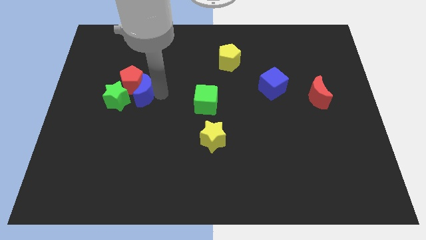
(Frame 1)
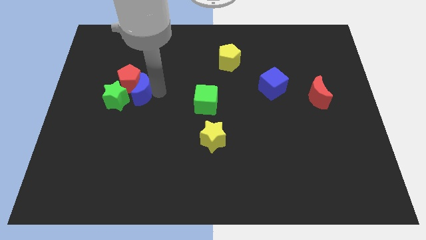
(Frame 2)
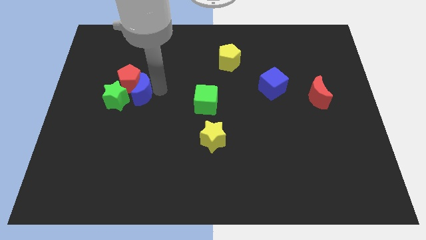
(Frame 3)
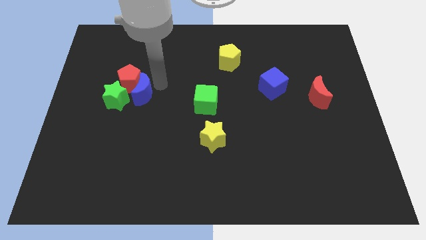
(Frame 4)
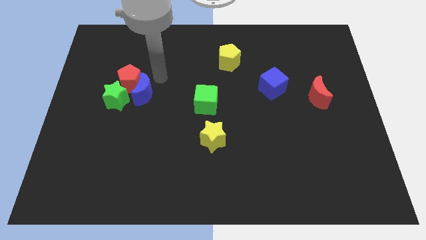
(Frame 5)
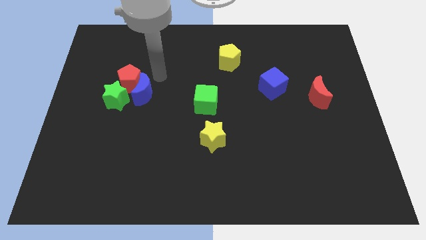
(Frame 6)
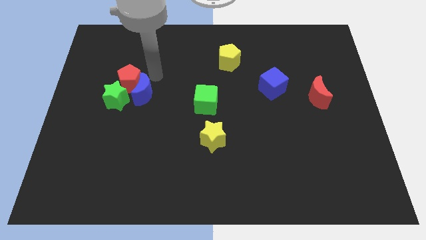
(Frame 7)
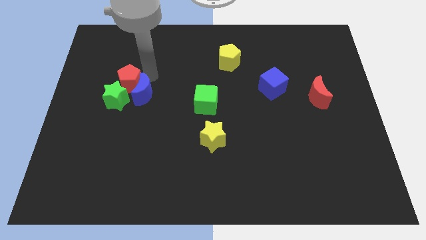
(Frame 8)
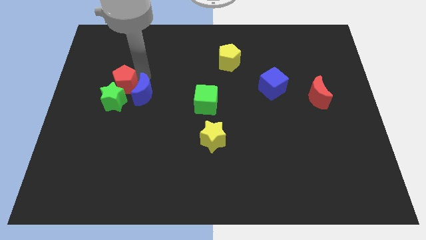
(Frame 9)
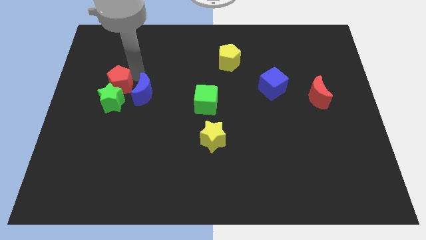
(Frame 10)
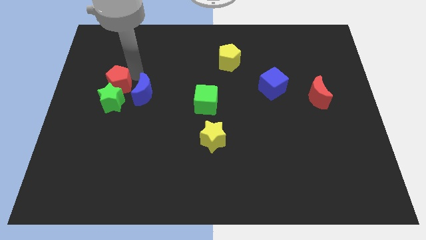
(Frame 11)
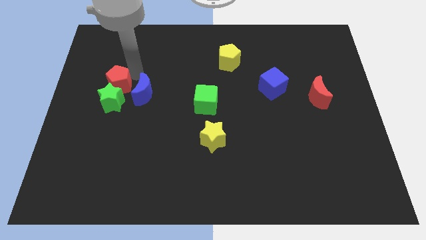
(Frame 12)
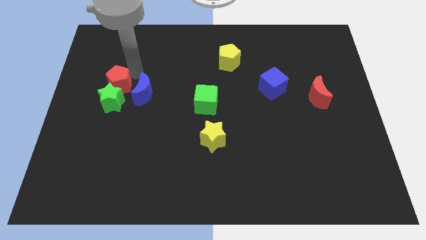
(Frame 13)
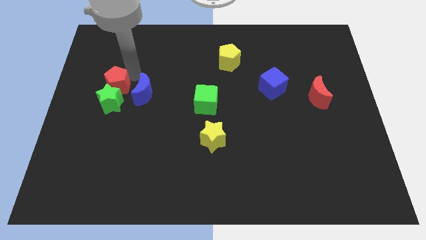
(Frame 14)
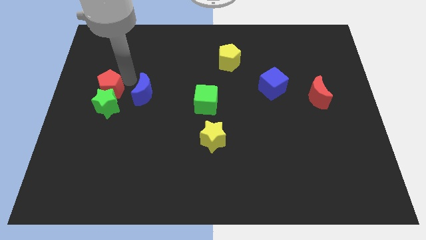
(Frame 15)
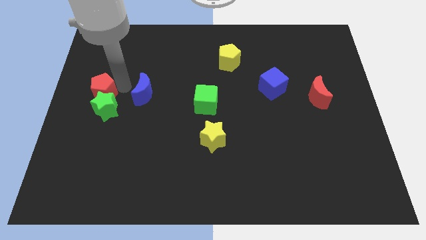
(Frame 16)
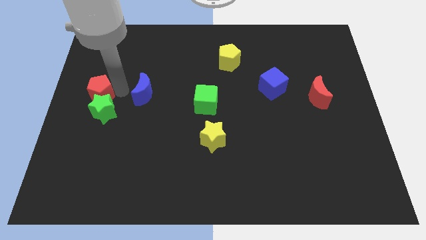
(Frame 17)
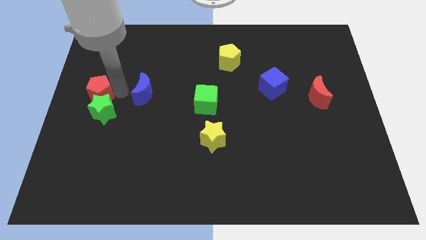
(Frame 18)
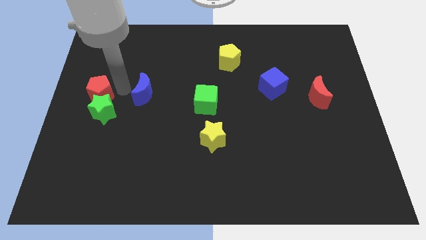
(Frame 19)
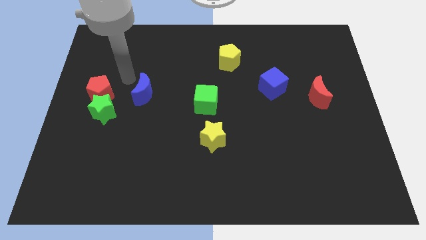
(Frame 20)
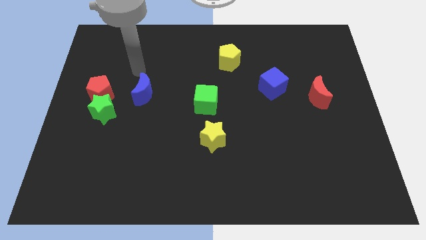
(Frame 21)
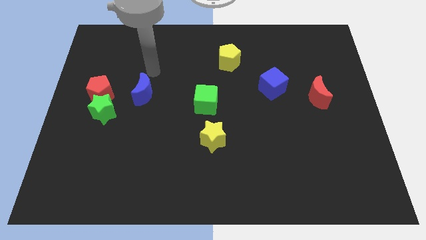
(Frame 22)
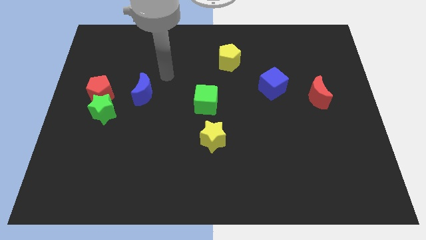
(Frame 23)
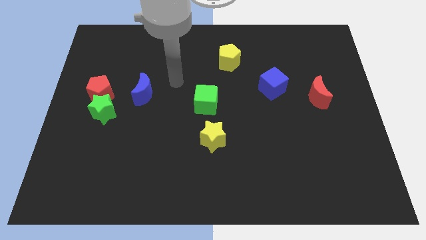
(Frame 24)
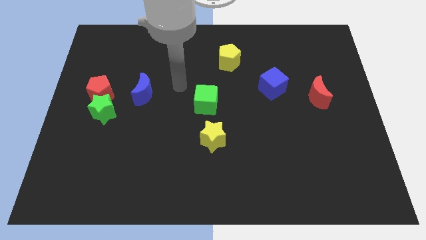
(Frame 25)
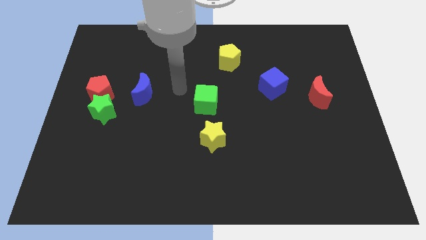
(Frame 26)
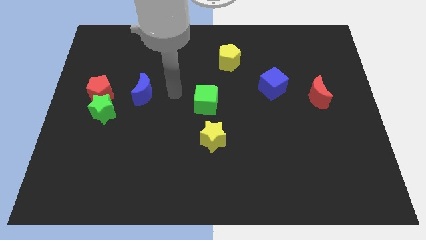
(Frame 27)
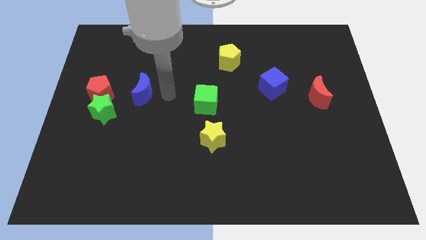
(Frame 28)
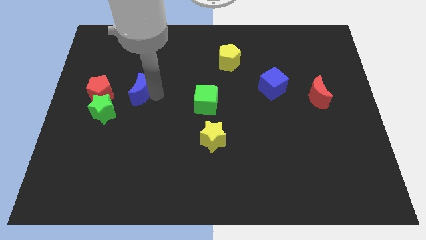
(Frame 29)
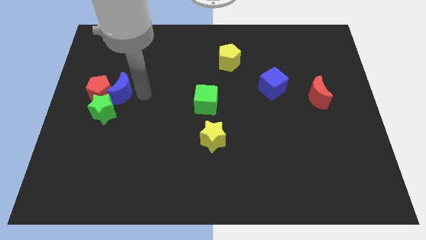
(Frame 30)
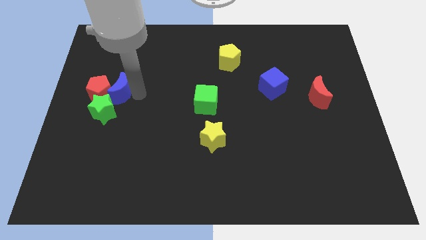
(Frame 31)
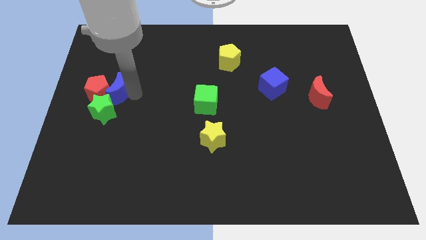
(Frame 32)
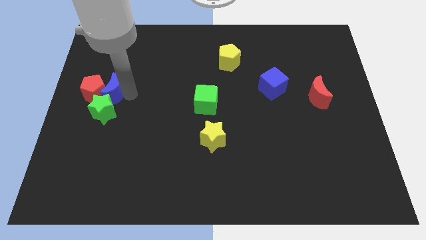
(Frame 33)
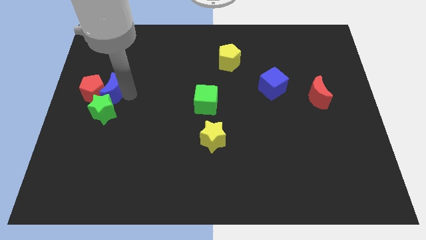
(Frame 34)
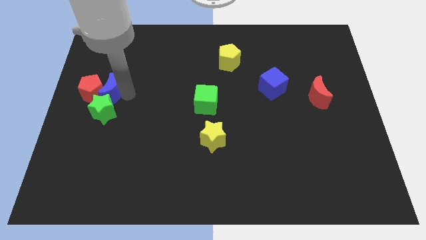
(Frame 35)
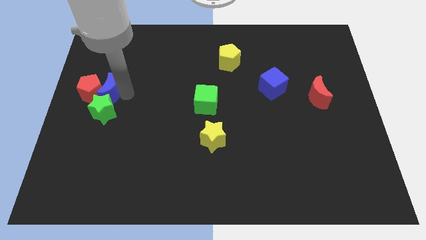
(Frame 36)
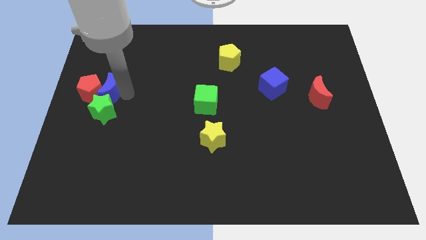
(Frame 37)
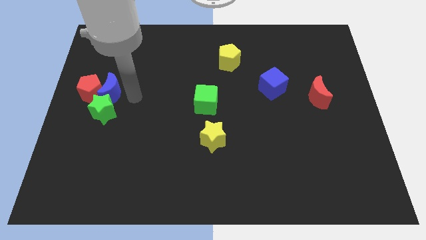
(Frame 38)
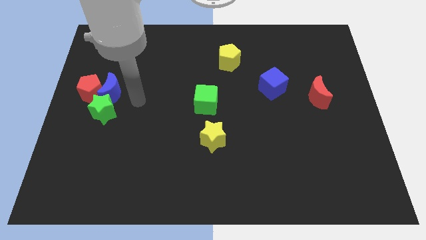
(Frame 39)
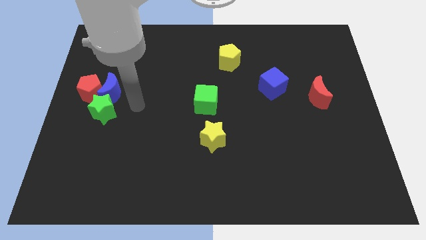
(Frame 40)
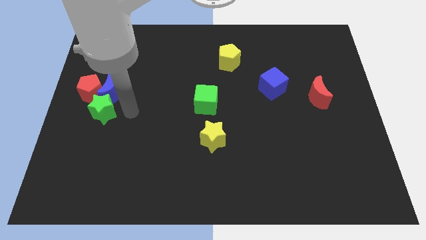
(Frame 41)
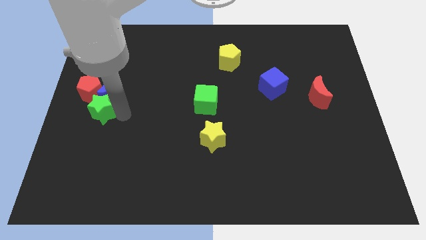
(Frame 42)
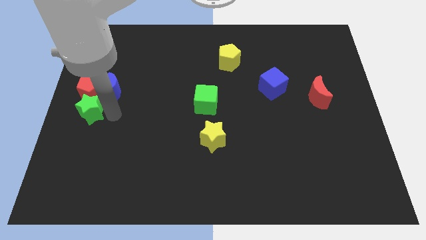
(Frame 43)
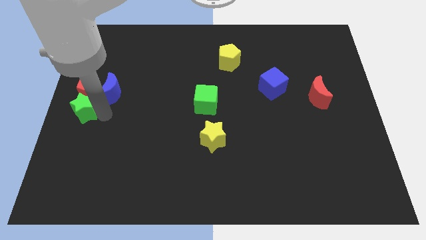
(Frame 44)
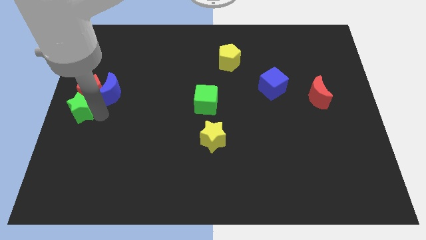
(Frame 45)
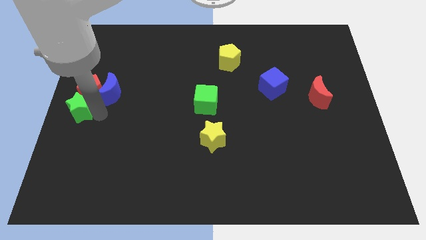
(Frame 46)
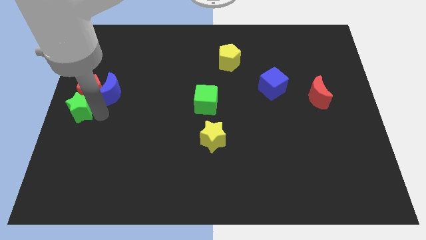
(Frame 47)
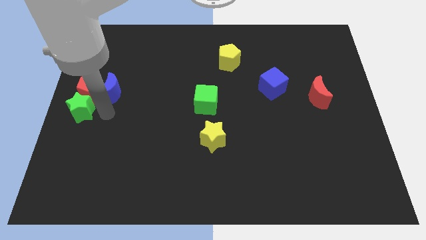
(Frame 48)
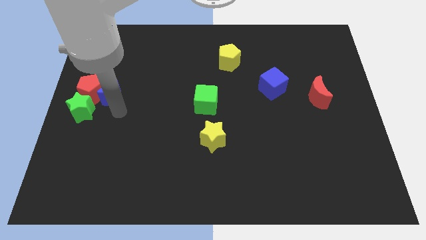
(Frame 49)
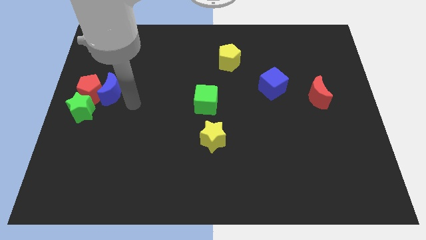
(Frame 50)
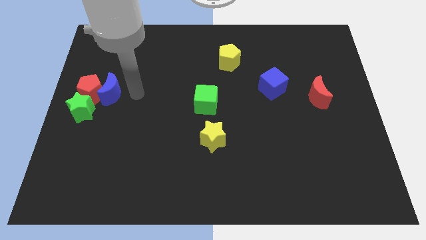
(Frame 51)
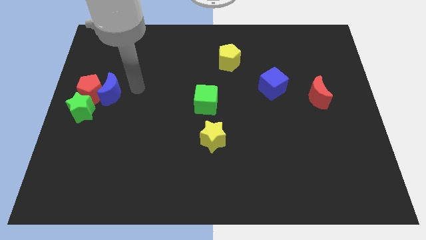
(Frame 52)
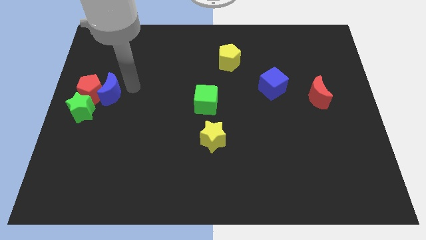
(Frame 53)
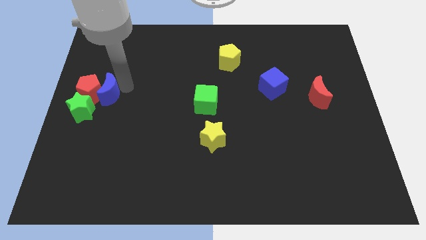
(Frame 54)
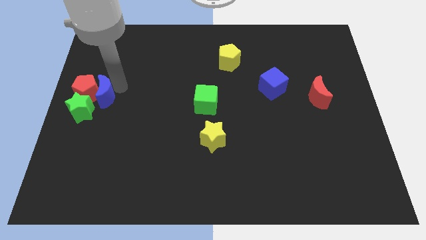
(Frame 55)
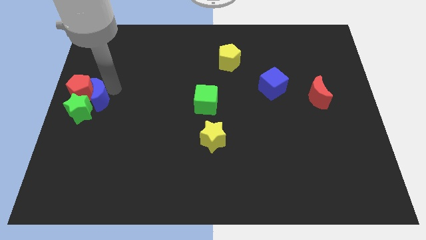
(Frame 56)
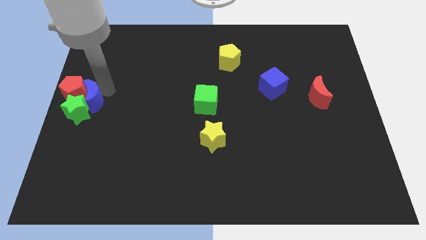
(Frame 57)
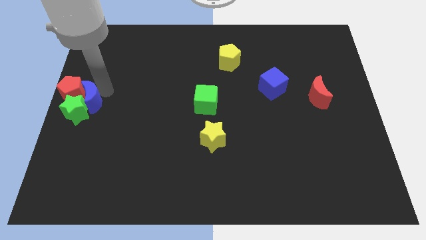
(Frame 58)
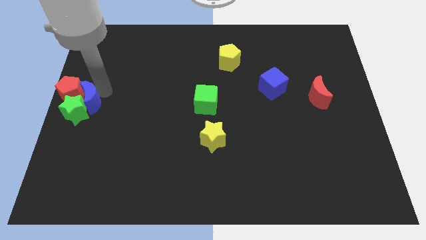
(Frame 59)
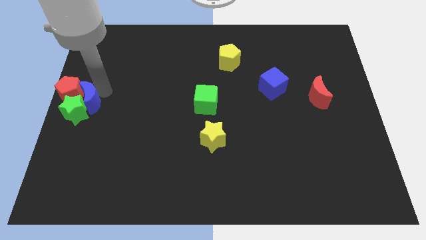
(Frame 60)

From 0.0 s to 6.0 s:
move the group of red pentagon blue crescent and green star towards the left center of the board

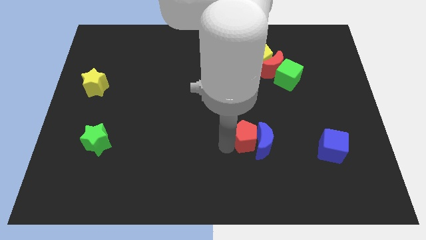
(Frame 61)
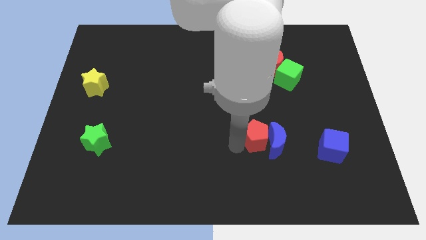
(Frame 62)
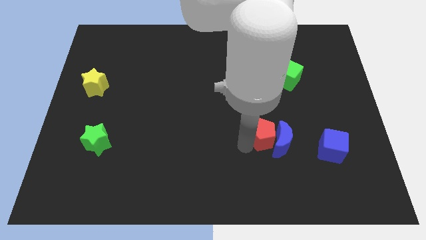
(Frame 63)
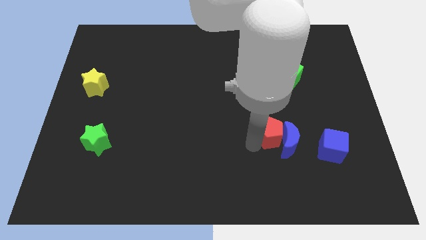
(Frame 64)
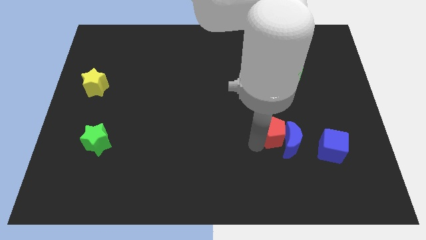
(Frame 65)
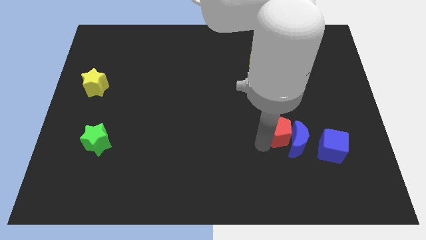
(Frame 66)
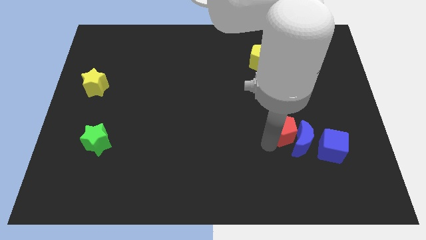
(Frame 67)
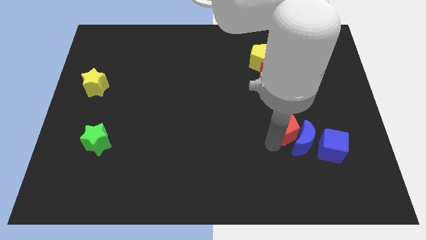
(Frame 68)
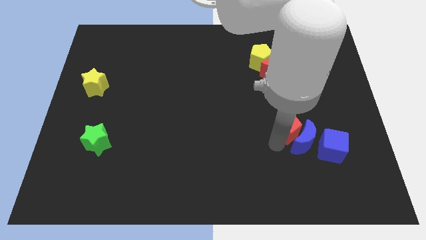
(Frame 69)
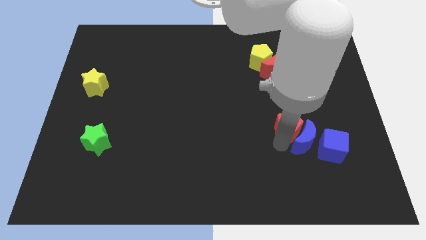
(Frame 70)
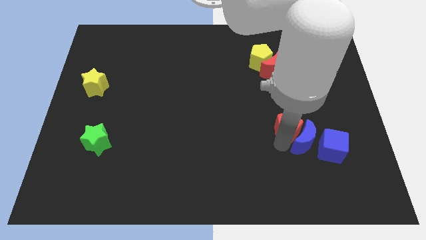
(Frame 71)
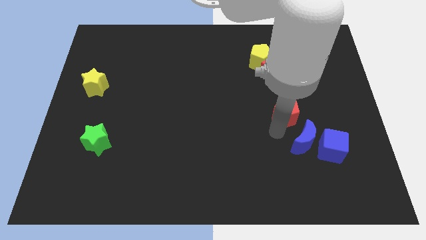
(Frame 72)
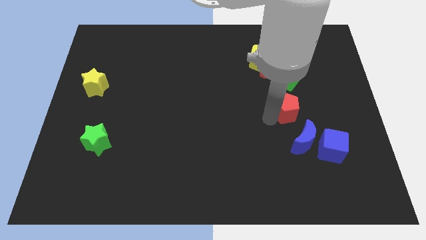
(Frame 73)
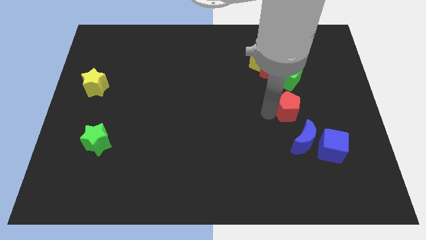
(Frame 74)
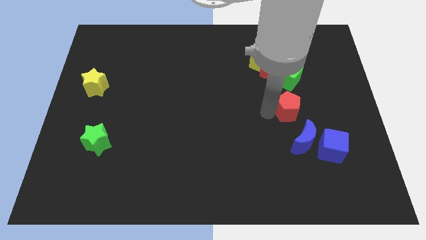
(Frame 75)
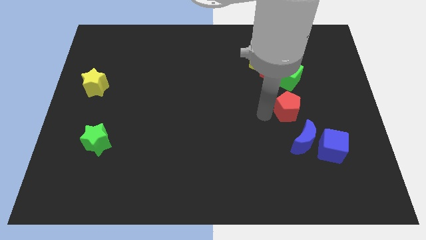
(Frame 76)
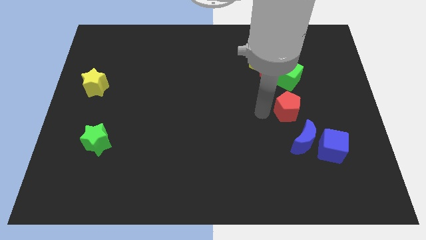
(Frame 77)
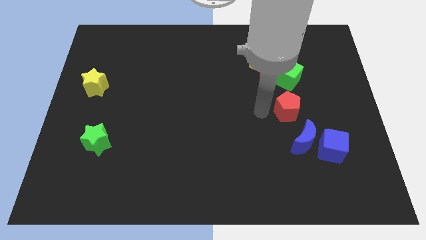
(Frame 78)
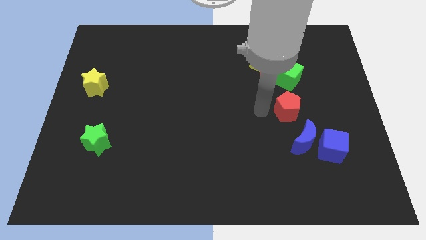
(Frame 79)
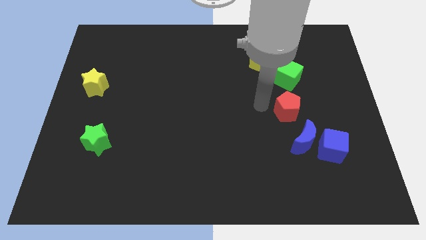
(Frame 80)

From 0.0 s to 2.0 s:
push the red pentagon with blue moon and separate

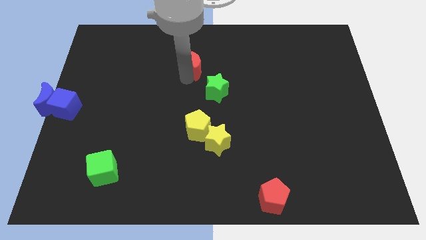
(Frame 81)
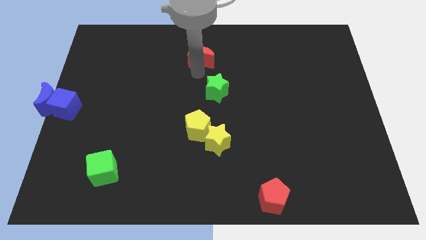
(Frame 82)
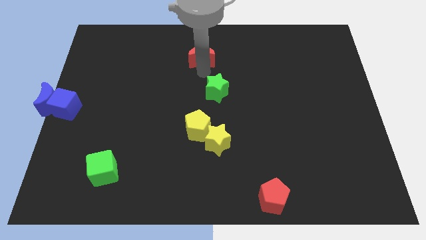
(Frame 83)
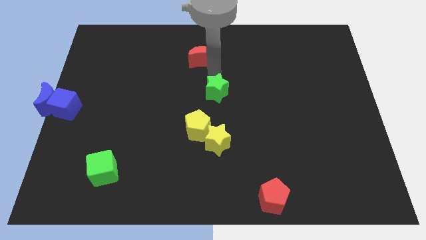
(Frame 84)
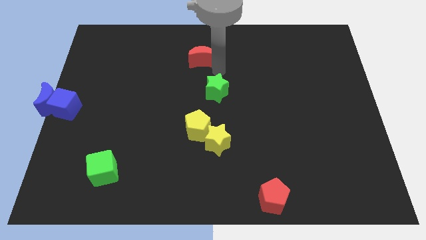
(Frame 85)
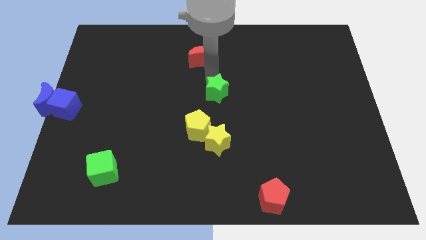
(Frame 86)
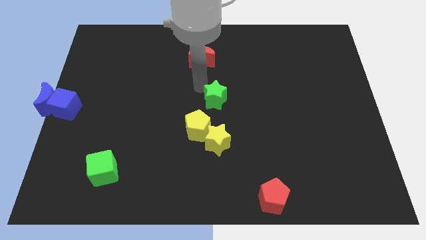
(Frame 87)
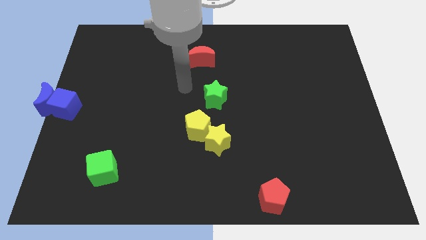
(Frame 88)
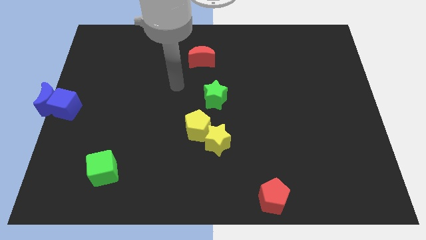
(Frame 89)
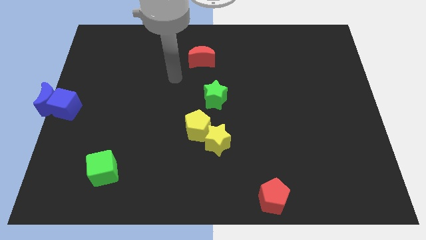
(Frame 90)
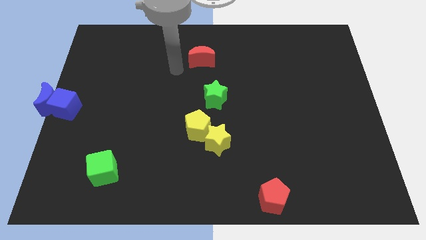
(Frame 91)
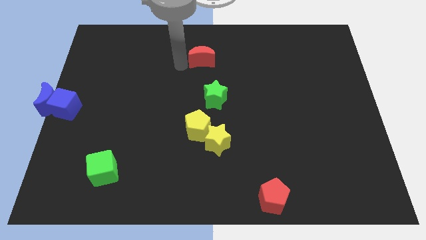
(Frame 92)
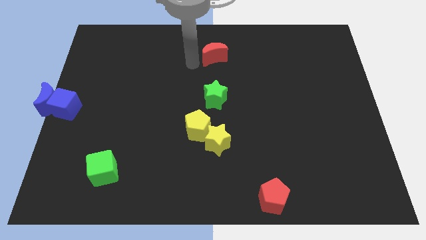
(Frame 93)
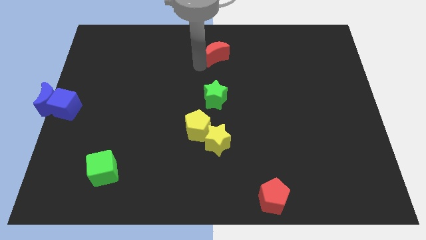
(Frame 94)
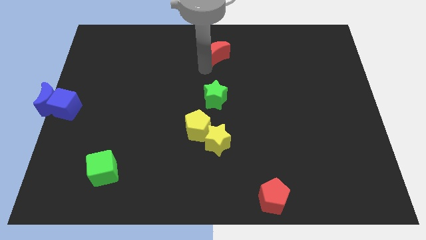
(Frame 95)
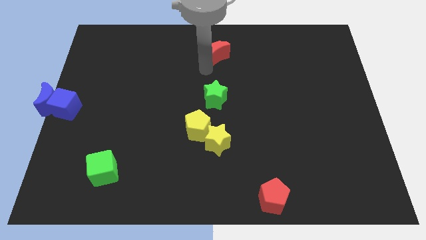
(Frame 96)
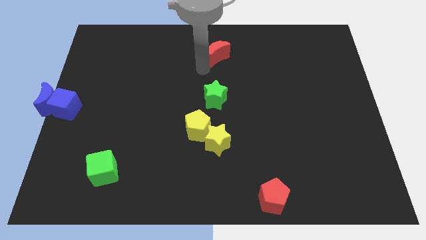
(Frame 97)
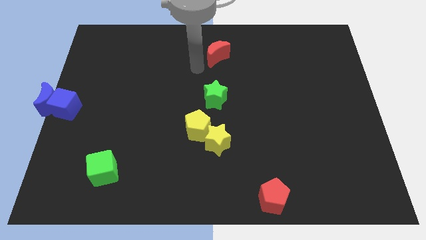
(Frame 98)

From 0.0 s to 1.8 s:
move the red crescent to the above of the green star
